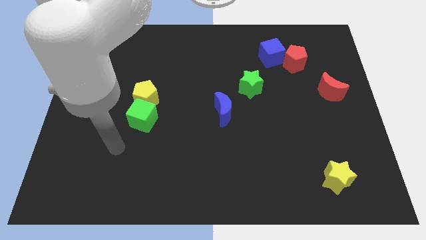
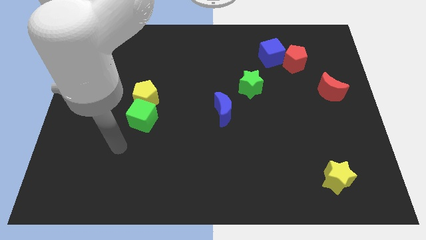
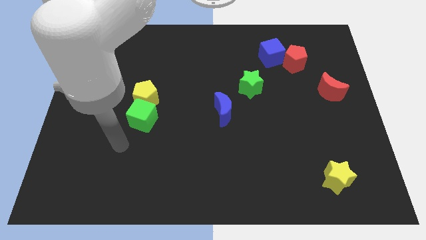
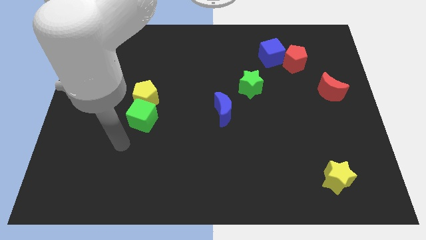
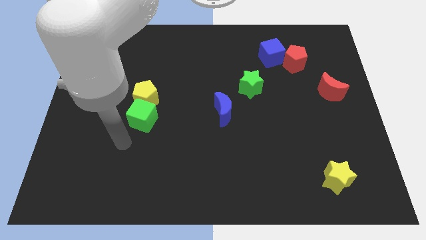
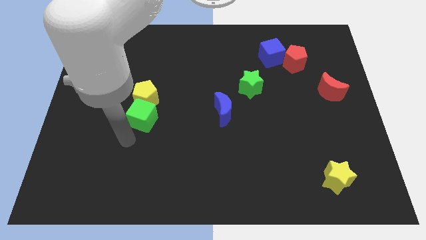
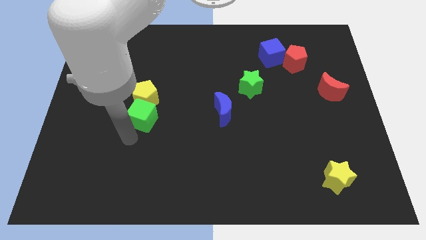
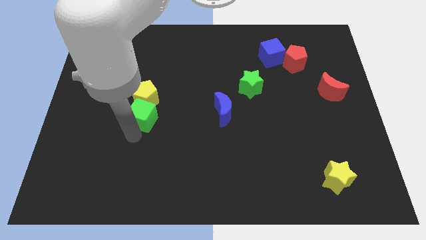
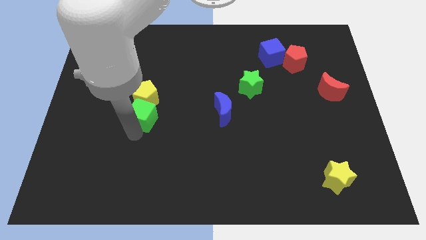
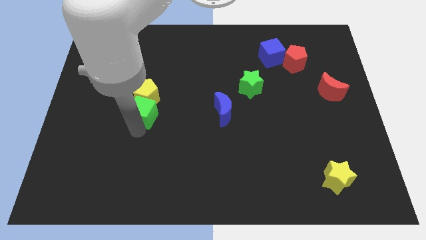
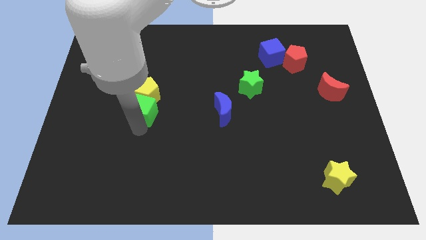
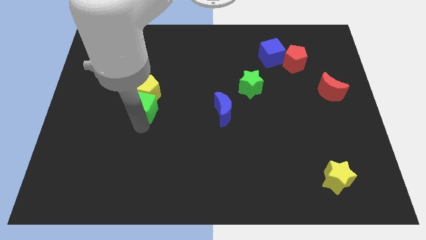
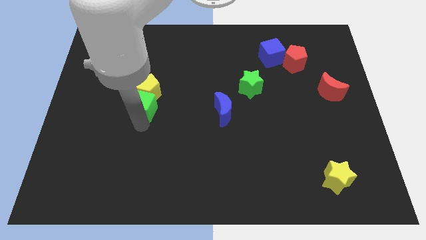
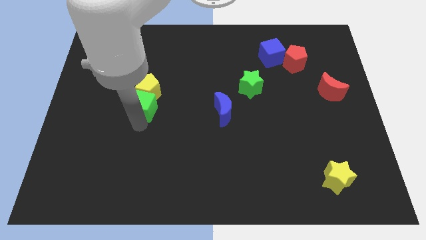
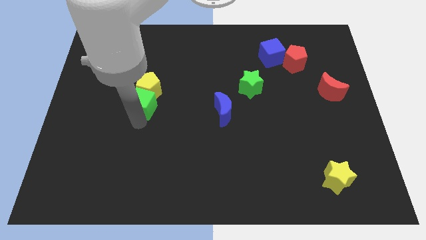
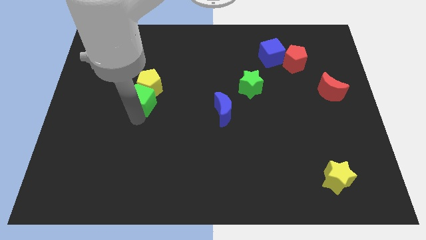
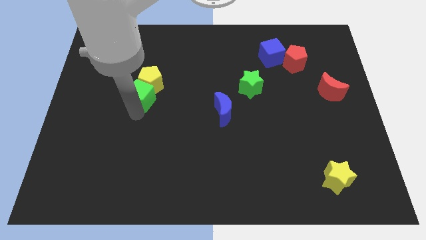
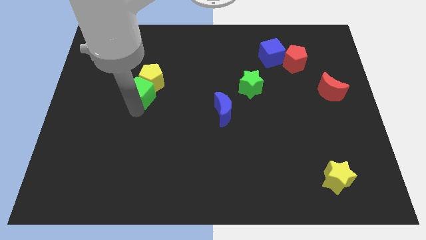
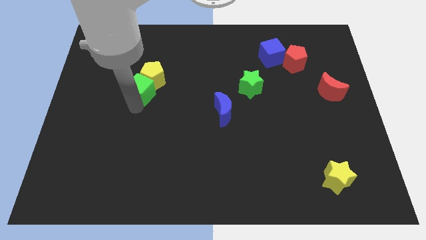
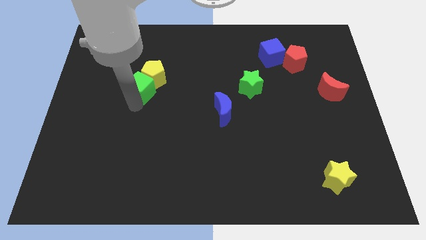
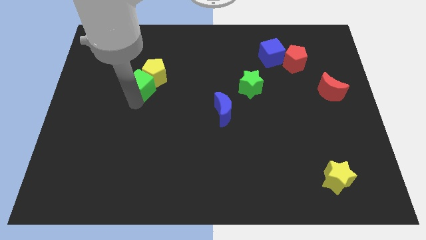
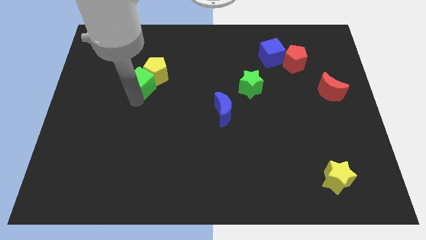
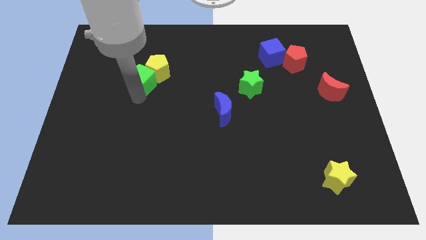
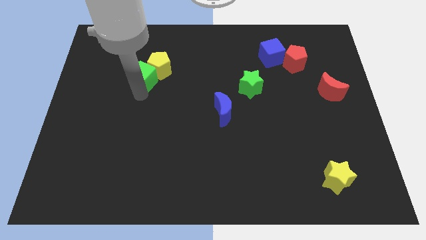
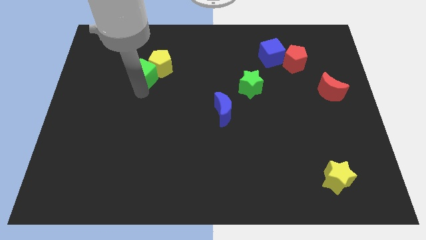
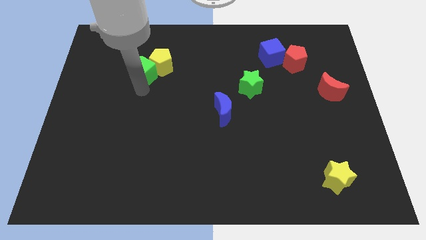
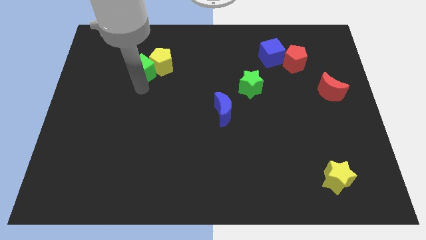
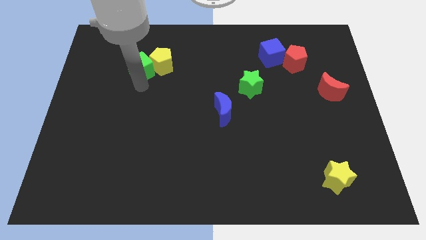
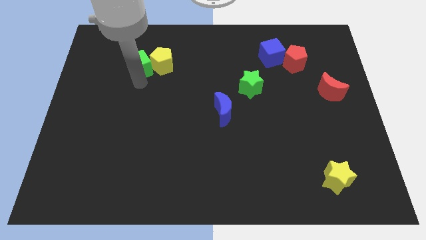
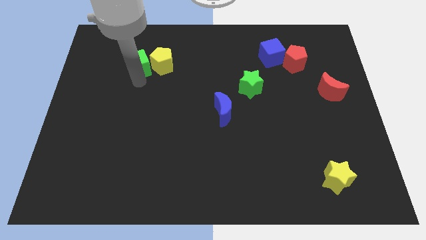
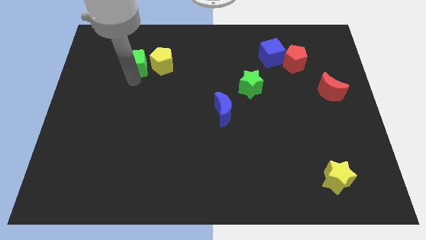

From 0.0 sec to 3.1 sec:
push the green cube and yellow pentagon towards the top side of the board

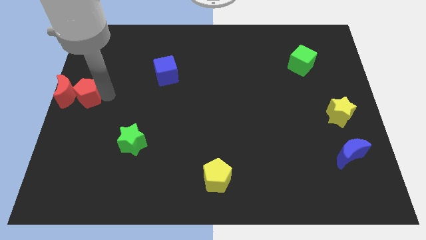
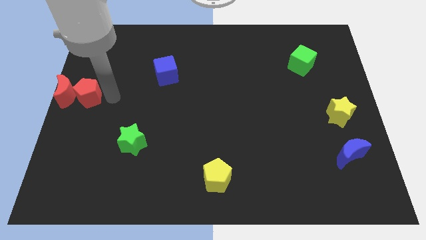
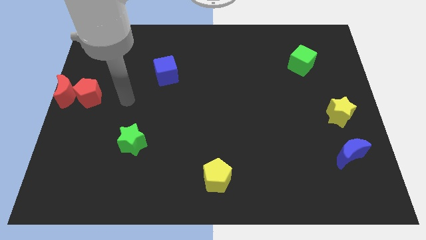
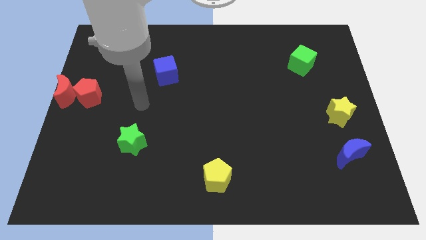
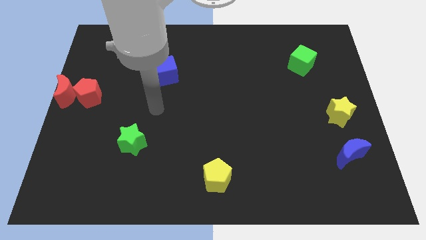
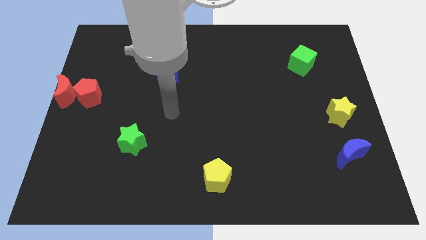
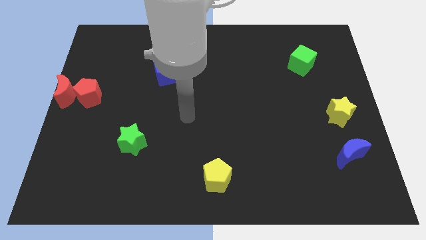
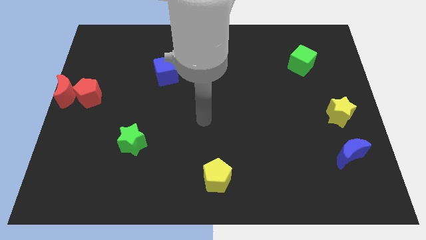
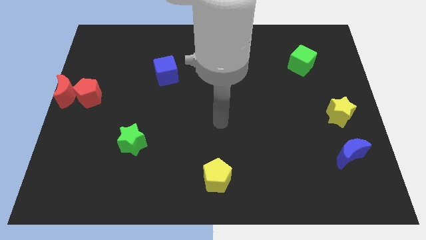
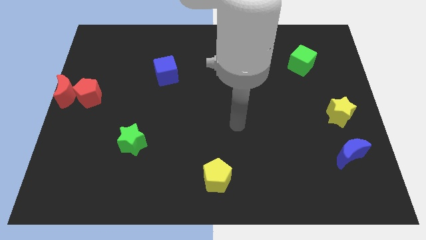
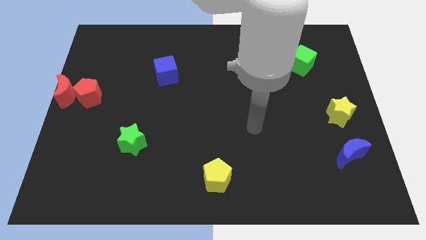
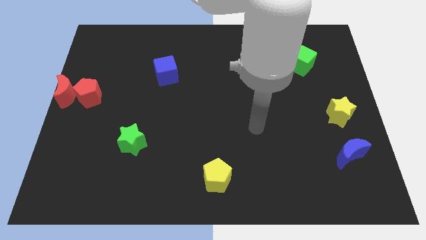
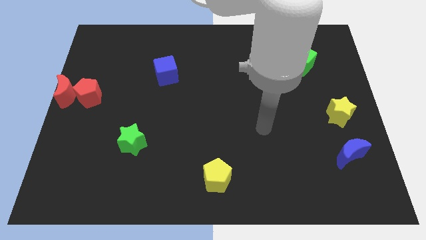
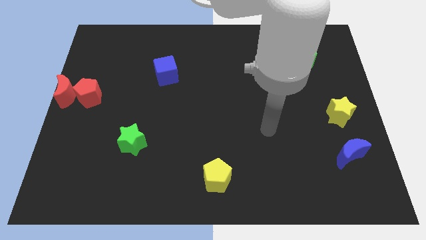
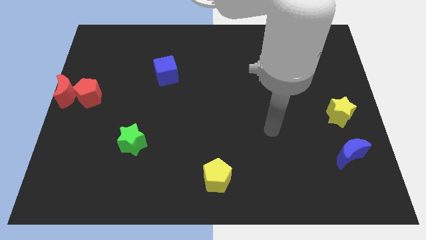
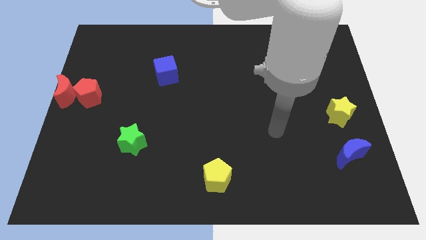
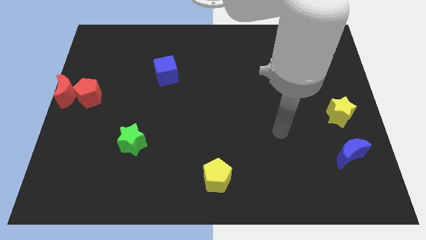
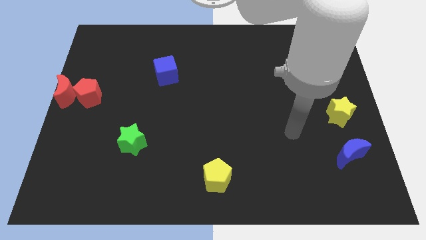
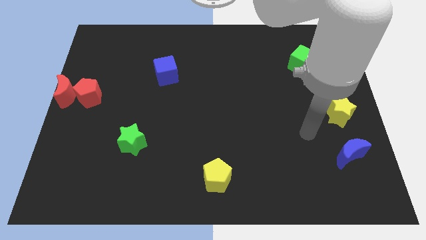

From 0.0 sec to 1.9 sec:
move the arm towards the bottom side of the yellow star

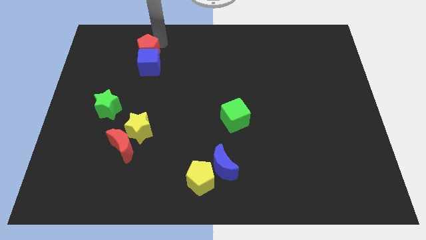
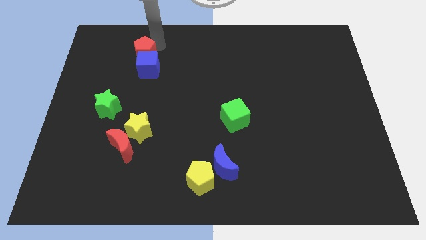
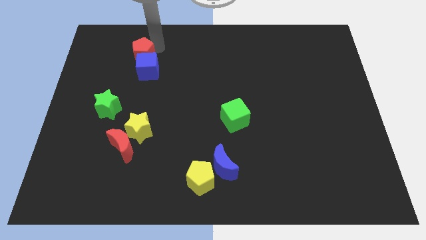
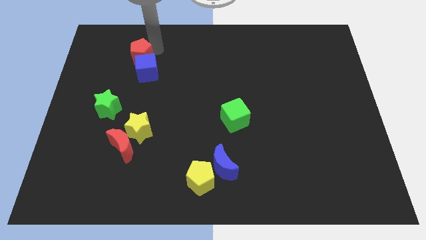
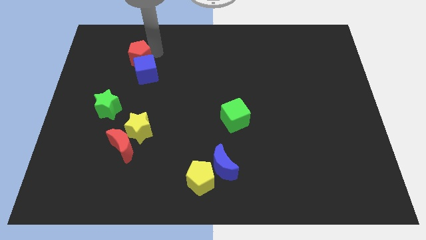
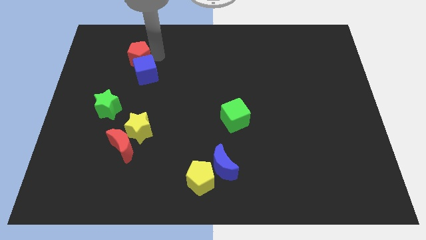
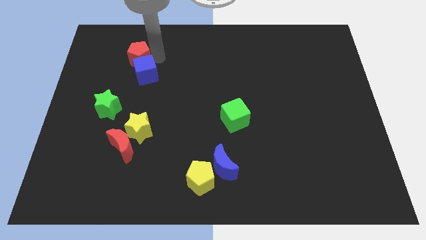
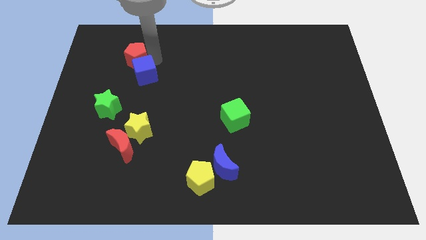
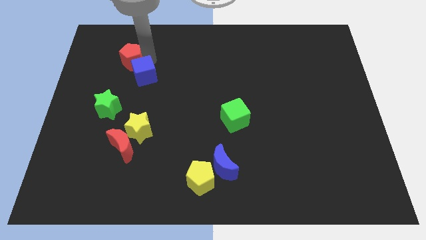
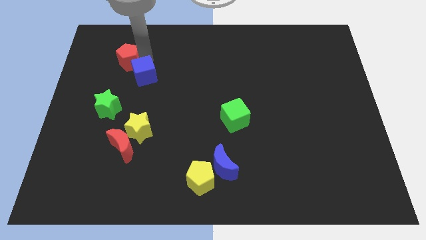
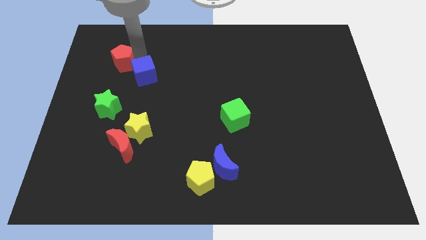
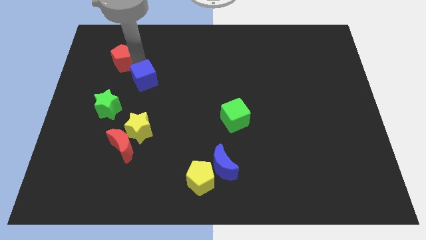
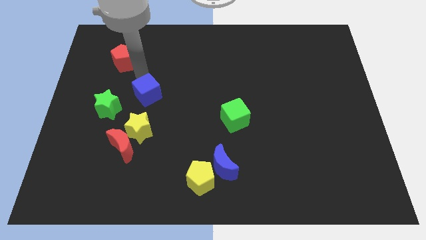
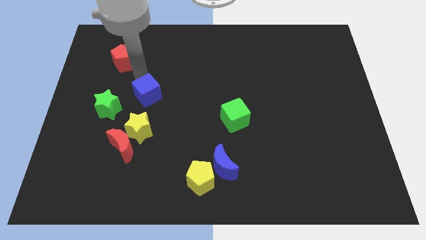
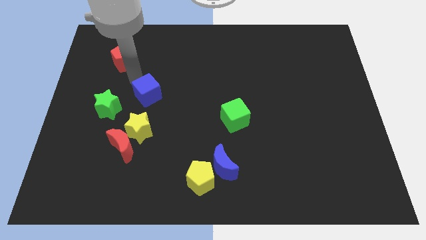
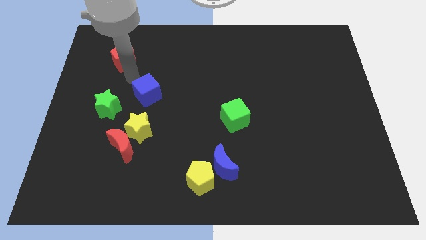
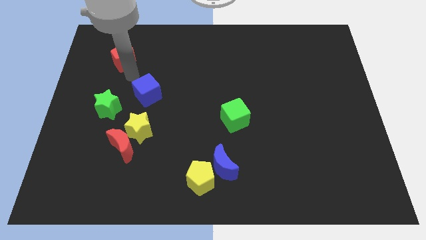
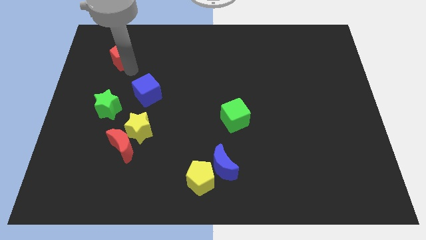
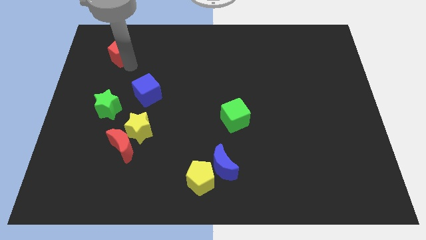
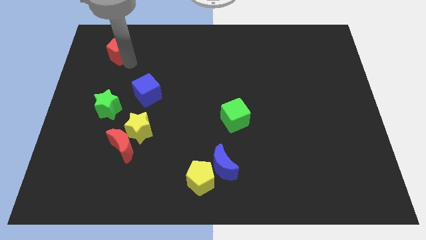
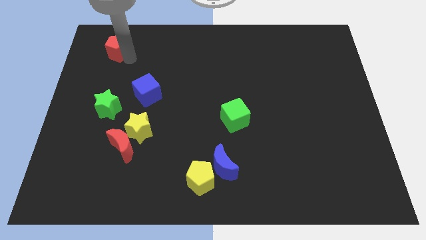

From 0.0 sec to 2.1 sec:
separate red pentagon from blue cube

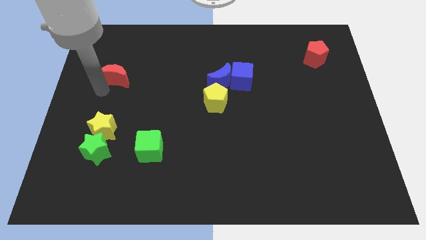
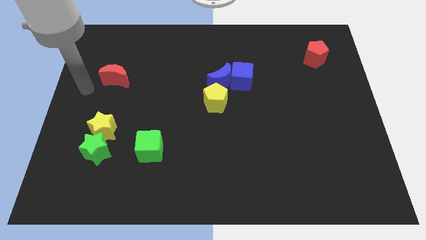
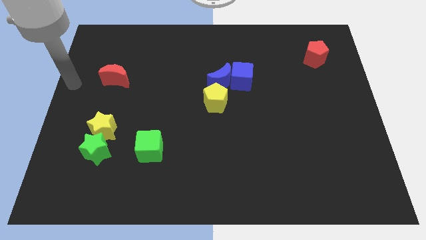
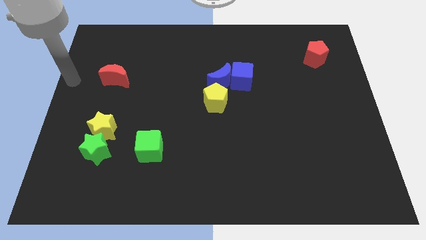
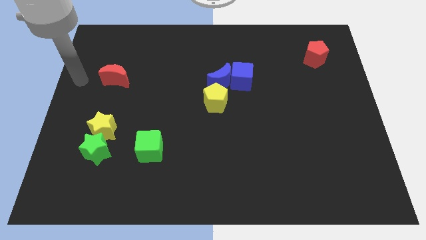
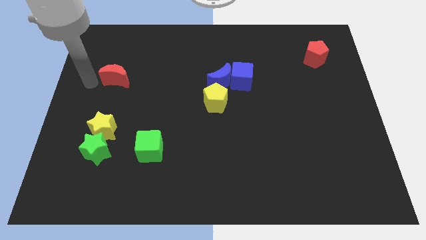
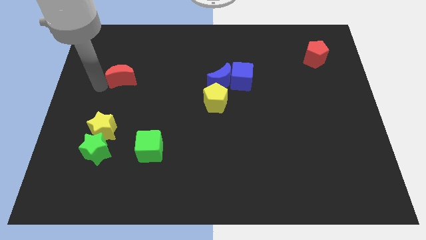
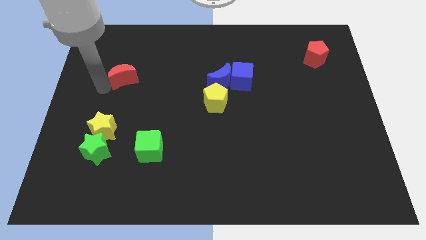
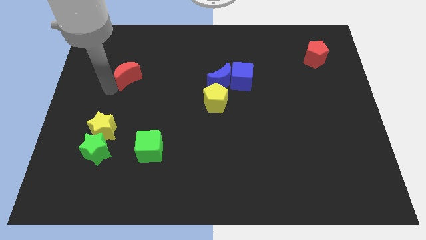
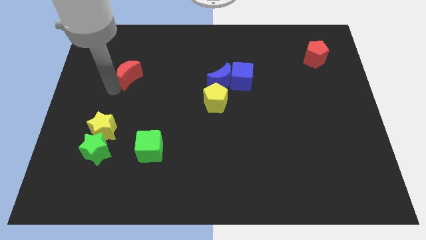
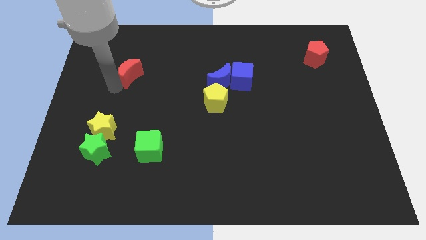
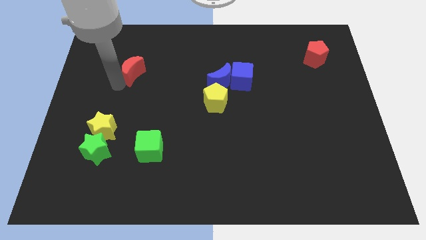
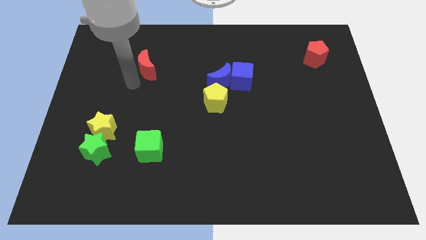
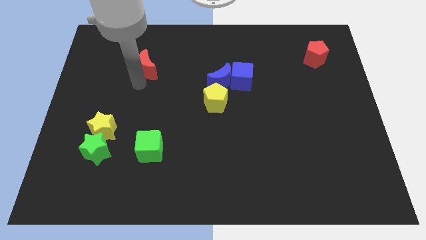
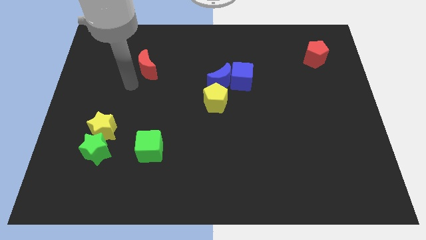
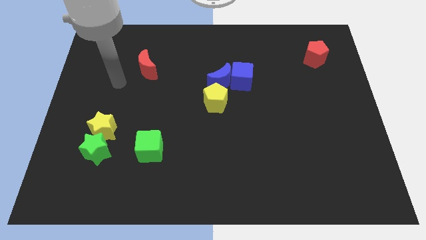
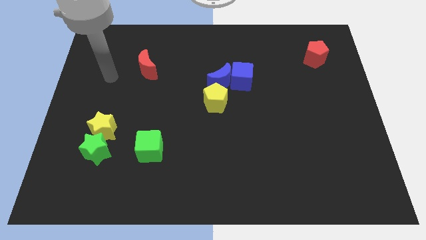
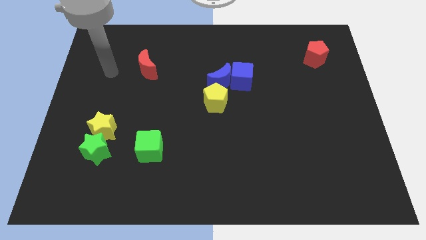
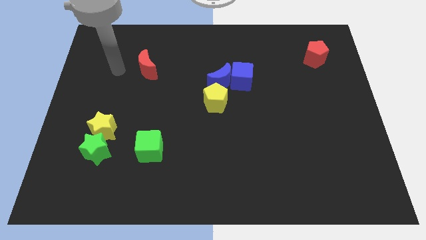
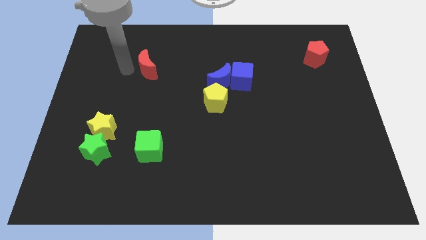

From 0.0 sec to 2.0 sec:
move the red crescent above the green cube
